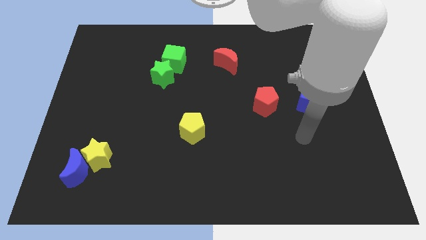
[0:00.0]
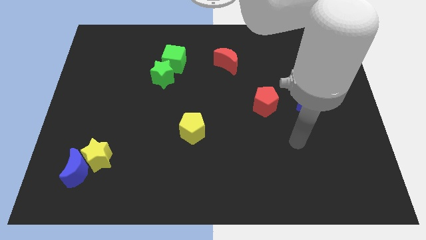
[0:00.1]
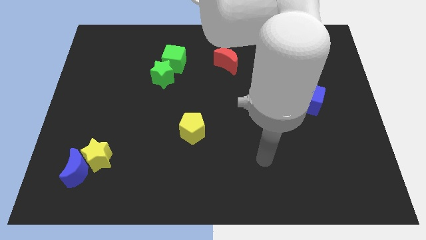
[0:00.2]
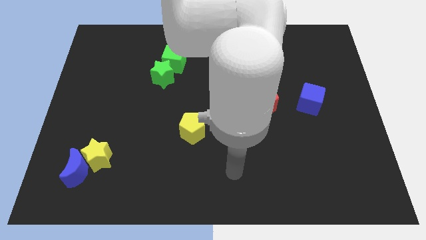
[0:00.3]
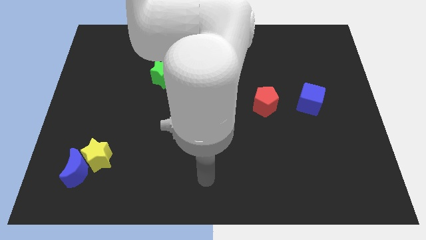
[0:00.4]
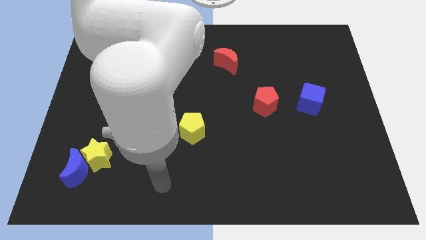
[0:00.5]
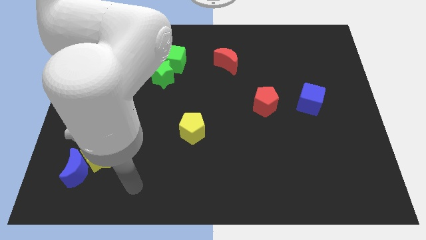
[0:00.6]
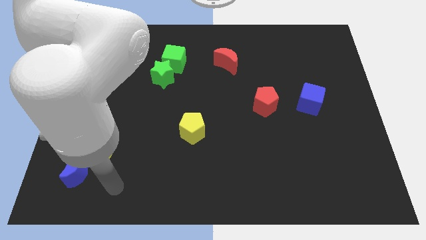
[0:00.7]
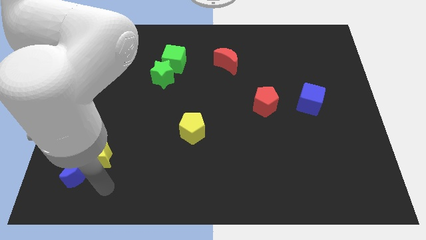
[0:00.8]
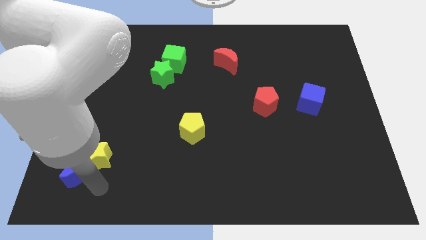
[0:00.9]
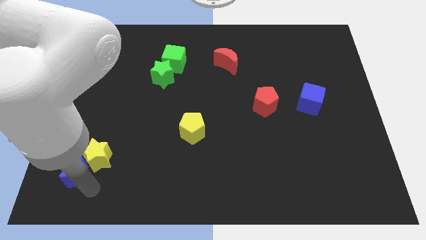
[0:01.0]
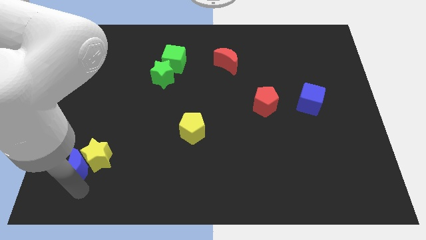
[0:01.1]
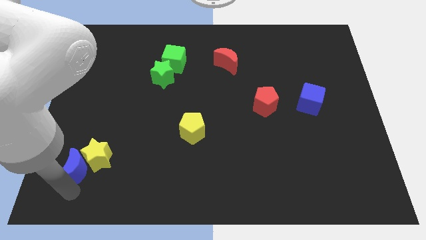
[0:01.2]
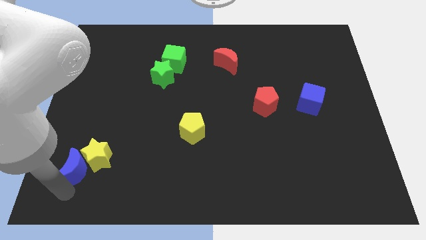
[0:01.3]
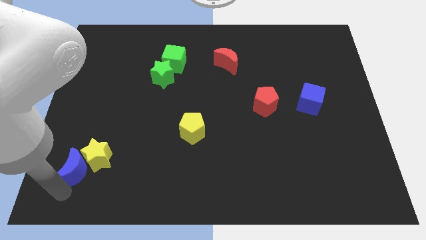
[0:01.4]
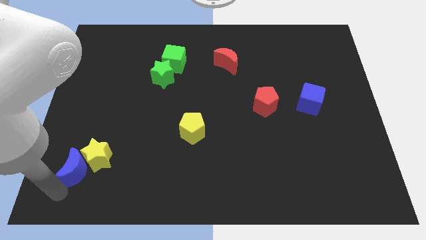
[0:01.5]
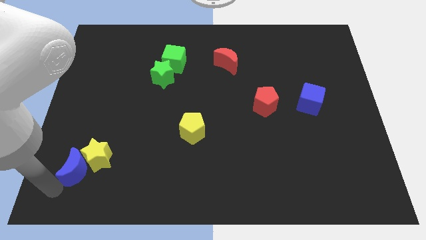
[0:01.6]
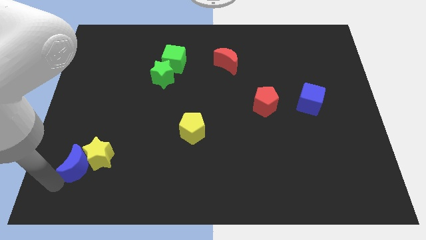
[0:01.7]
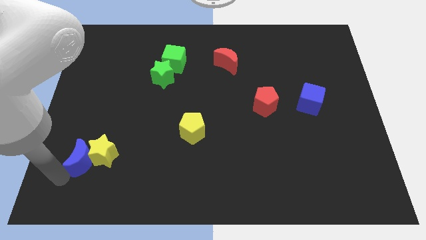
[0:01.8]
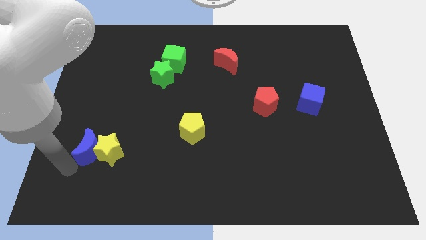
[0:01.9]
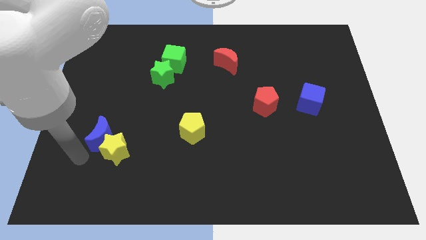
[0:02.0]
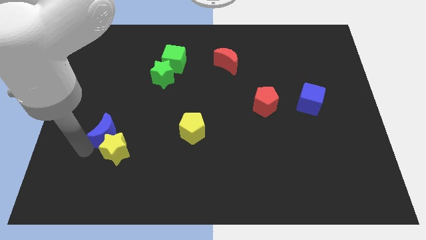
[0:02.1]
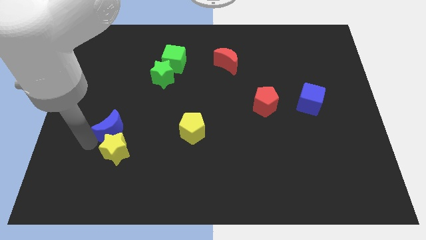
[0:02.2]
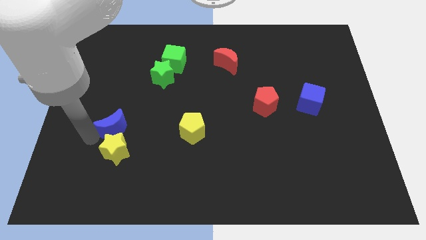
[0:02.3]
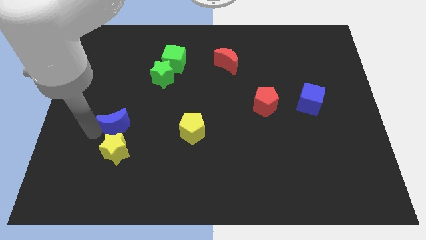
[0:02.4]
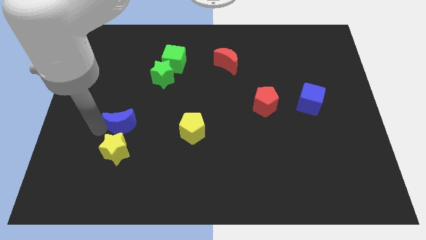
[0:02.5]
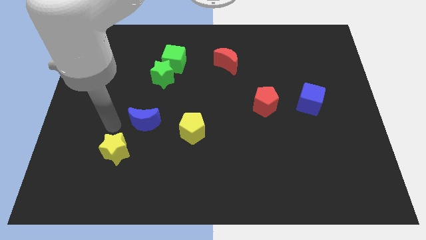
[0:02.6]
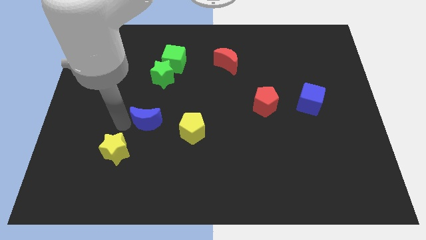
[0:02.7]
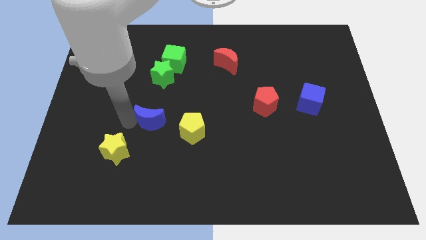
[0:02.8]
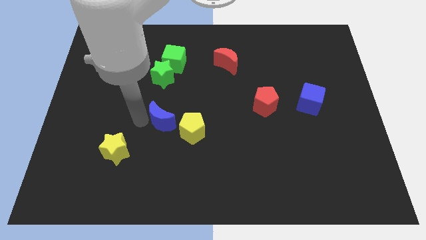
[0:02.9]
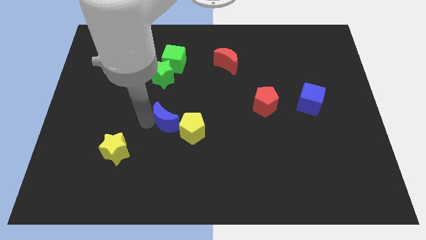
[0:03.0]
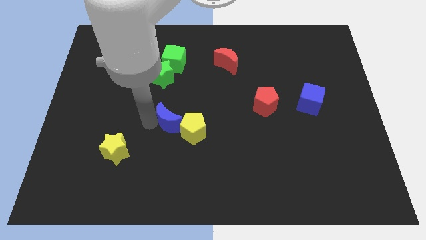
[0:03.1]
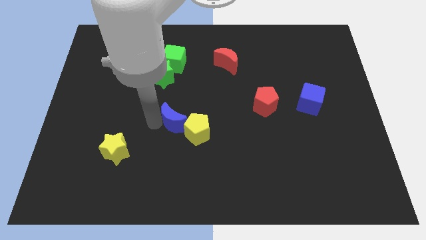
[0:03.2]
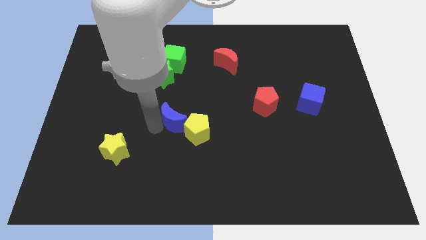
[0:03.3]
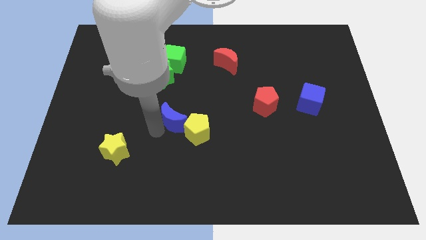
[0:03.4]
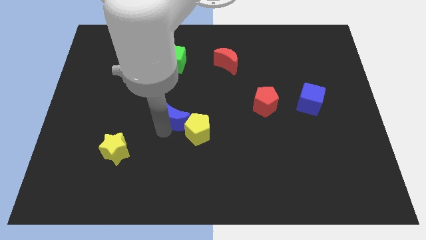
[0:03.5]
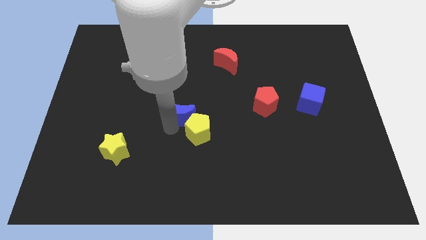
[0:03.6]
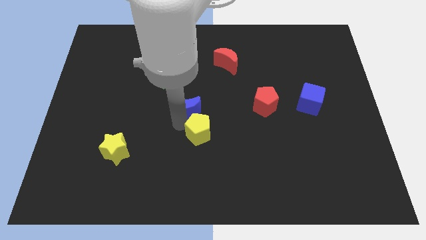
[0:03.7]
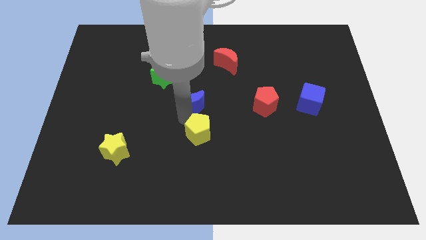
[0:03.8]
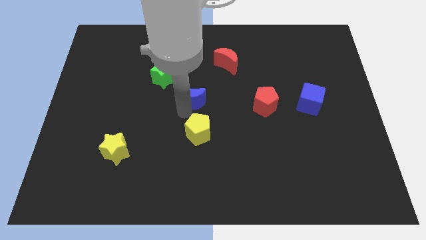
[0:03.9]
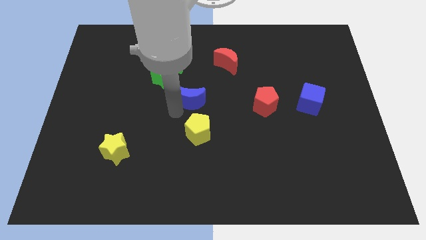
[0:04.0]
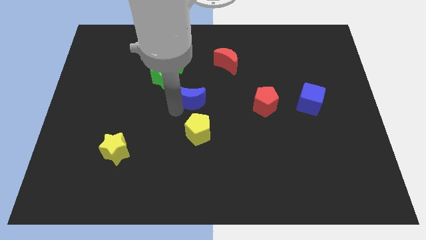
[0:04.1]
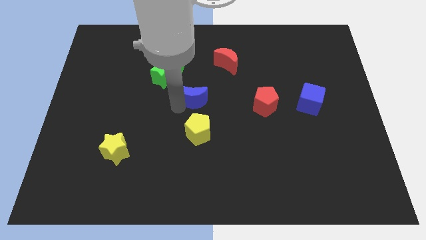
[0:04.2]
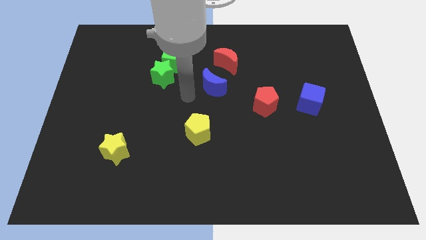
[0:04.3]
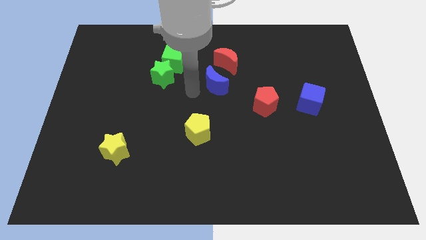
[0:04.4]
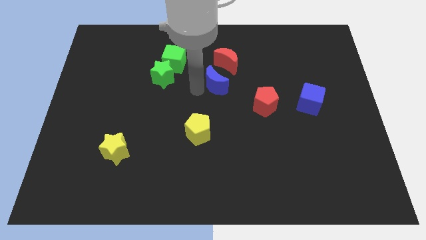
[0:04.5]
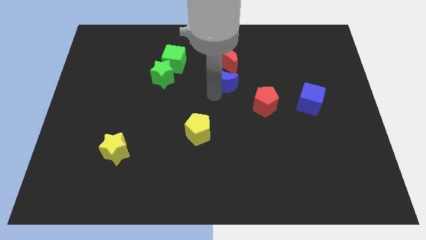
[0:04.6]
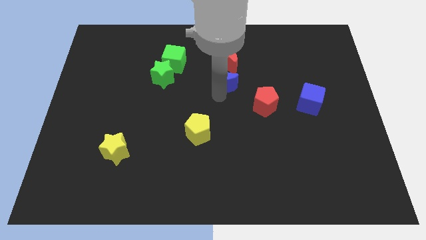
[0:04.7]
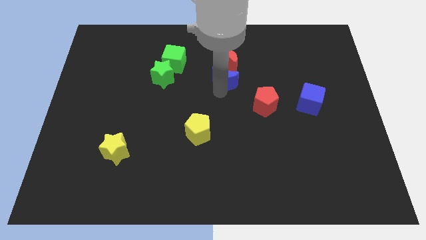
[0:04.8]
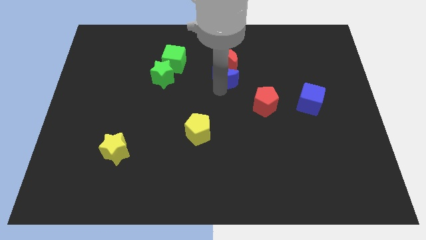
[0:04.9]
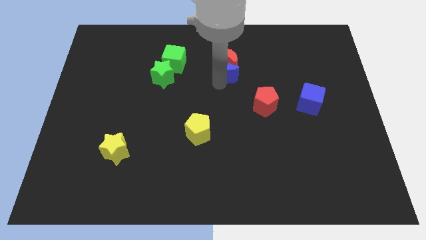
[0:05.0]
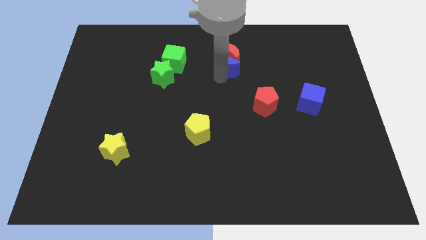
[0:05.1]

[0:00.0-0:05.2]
put the blue moon towards the red moon

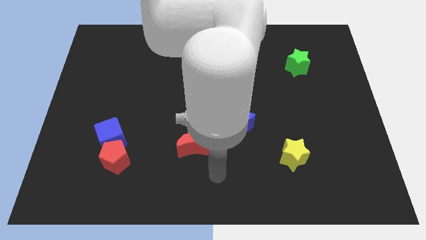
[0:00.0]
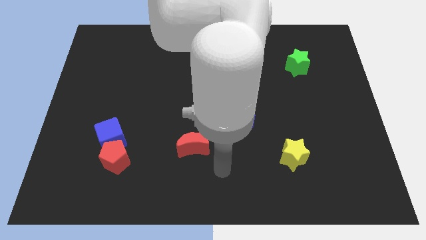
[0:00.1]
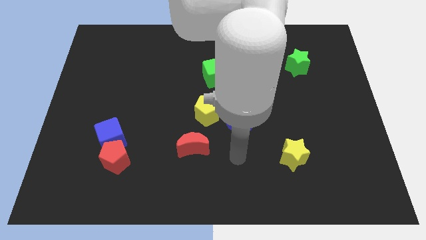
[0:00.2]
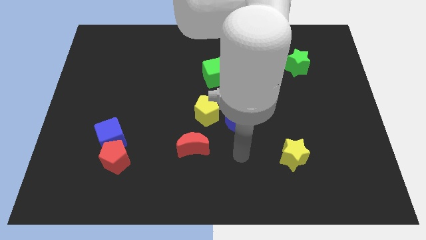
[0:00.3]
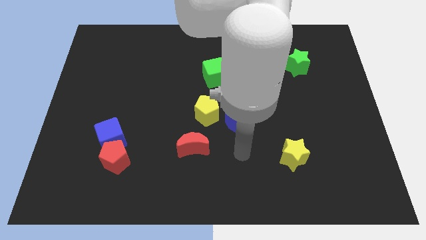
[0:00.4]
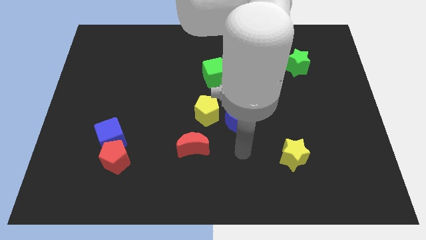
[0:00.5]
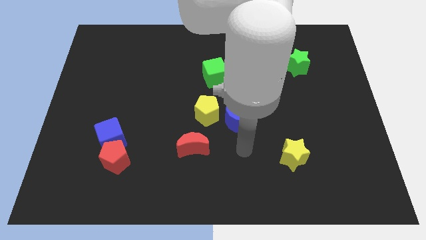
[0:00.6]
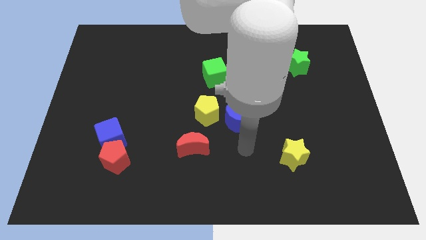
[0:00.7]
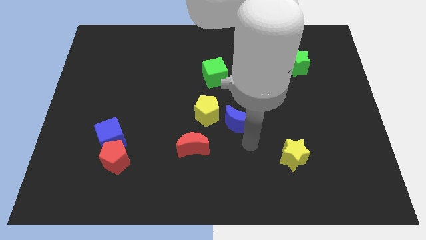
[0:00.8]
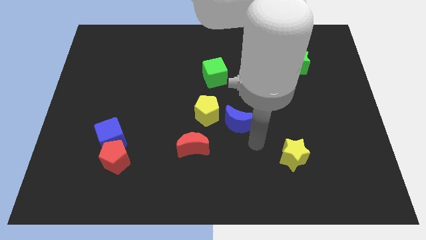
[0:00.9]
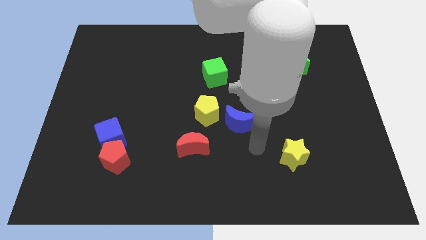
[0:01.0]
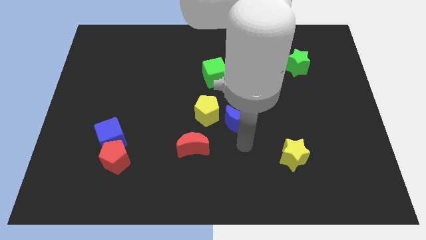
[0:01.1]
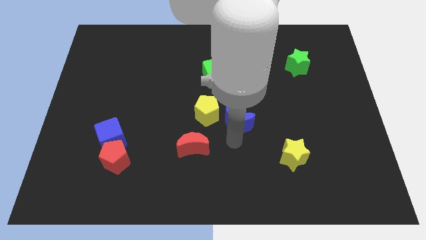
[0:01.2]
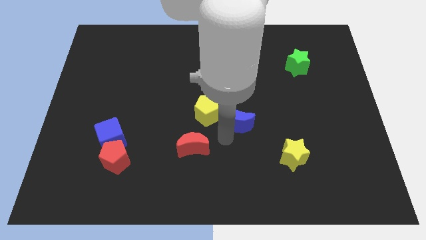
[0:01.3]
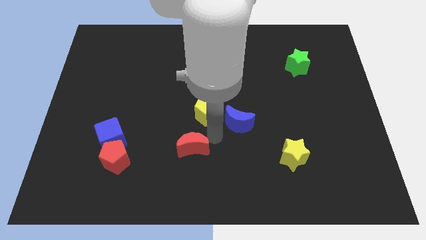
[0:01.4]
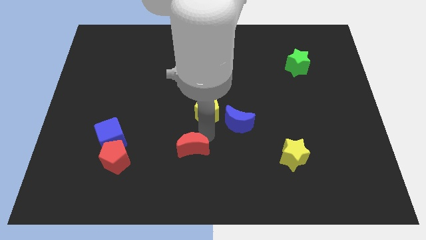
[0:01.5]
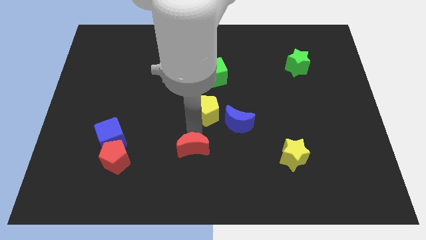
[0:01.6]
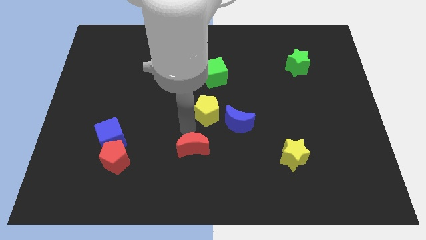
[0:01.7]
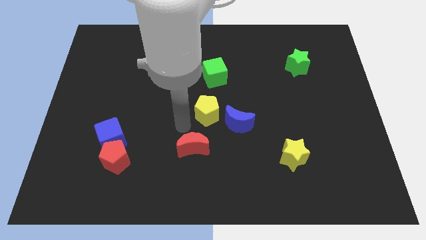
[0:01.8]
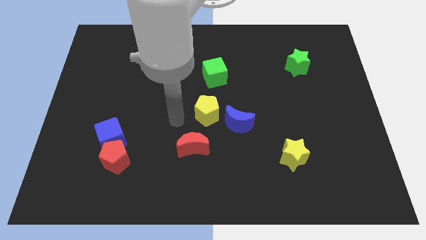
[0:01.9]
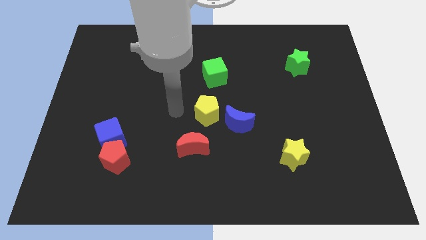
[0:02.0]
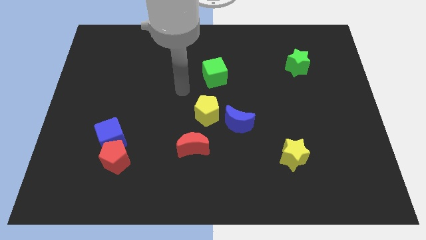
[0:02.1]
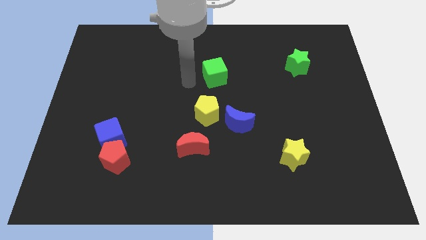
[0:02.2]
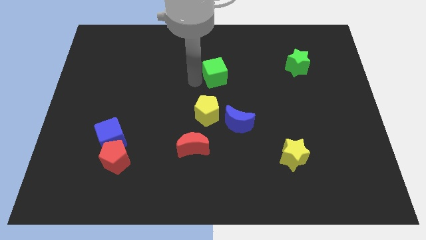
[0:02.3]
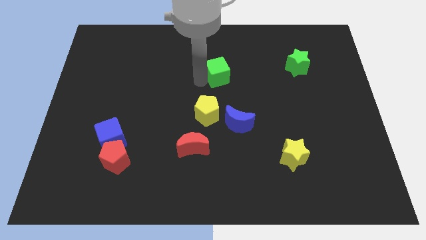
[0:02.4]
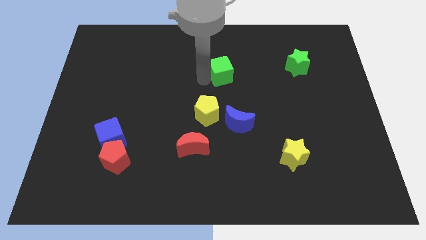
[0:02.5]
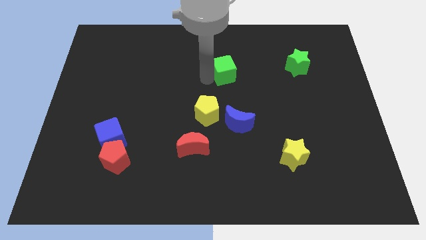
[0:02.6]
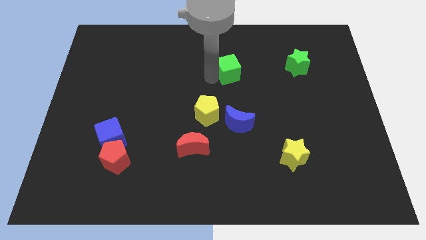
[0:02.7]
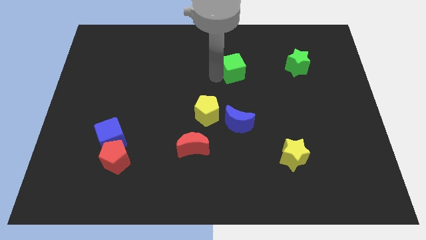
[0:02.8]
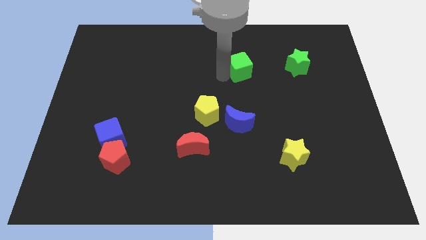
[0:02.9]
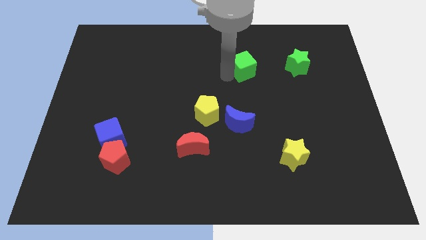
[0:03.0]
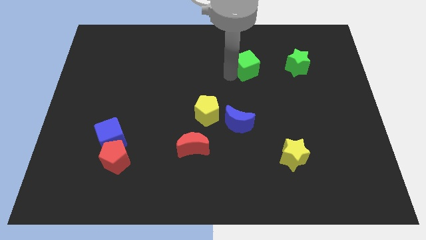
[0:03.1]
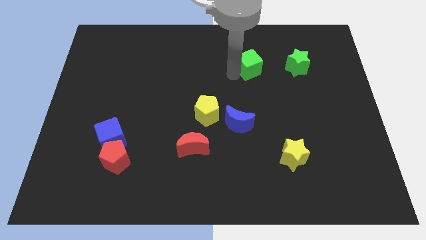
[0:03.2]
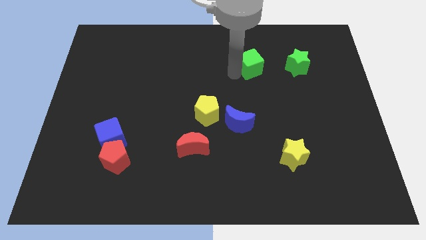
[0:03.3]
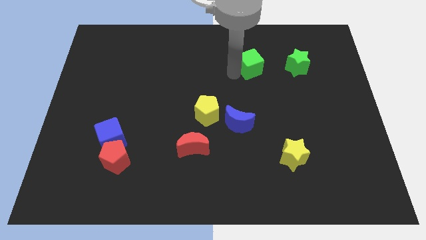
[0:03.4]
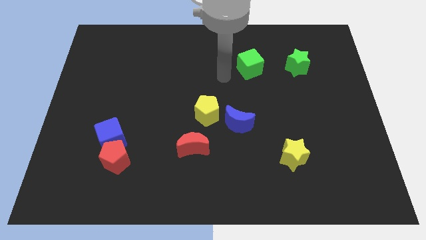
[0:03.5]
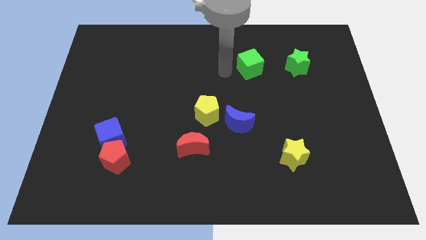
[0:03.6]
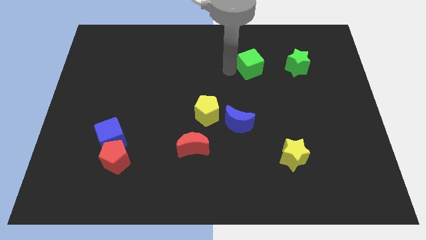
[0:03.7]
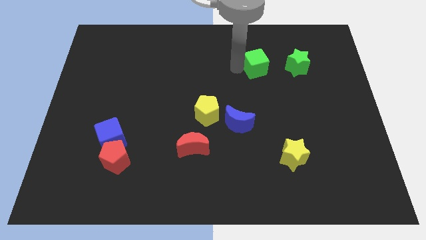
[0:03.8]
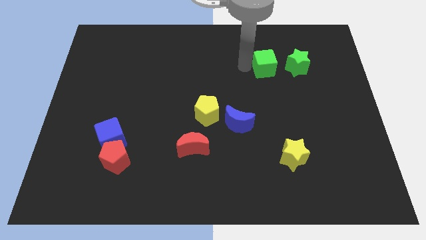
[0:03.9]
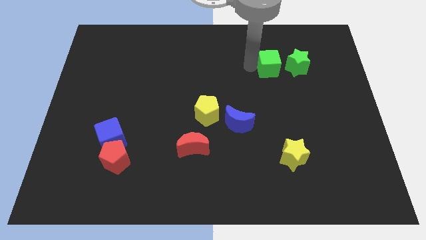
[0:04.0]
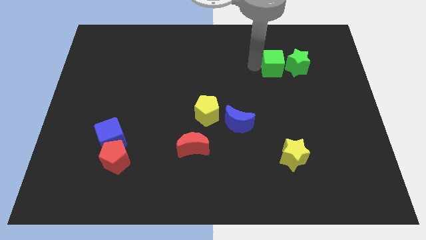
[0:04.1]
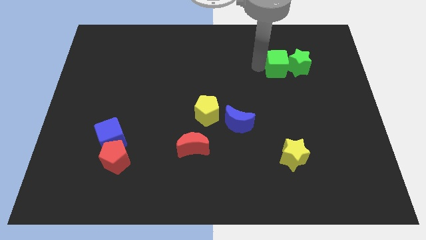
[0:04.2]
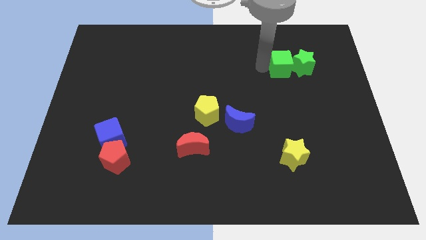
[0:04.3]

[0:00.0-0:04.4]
push the green cube towards the green star
